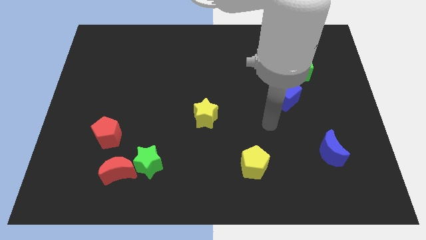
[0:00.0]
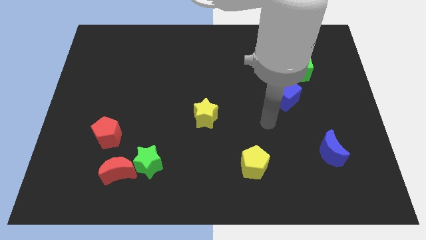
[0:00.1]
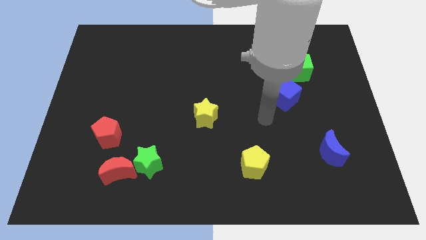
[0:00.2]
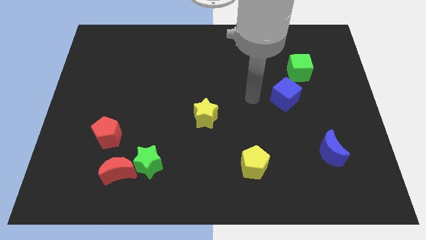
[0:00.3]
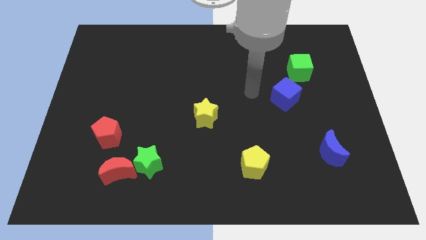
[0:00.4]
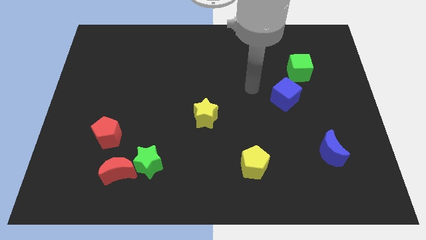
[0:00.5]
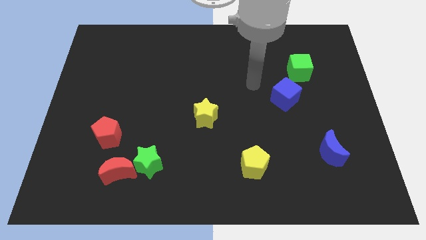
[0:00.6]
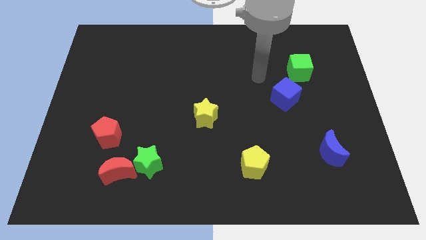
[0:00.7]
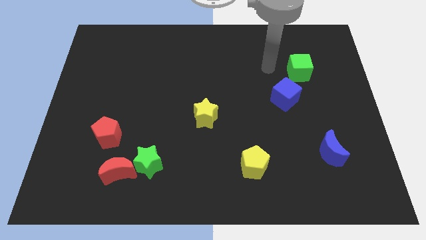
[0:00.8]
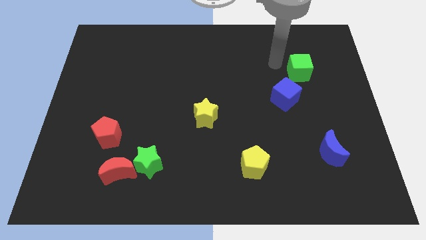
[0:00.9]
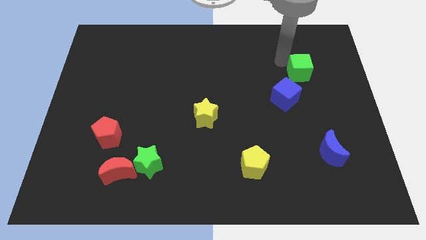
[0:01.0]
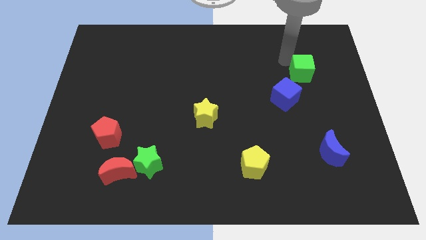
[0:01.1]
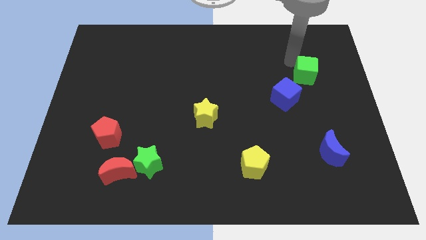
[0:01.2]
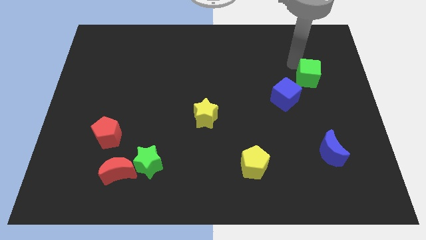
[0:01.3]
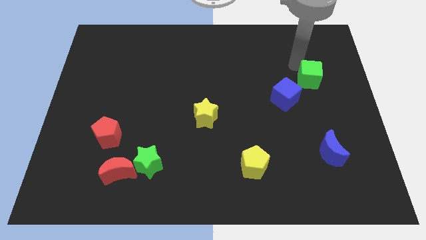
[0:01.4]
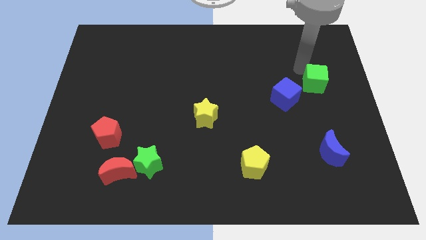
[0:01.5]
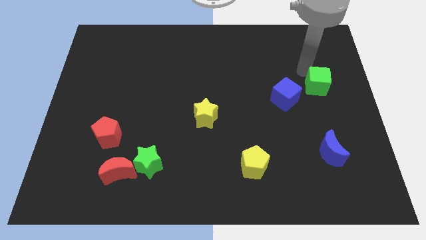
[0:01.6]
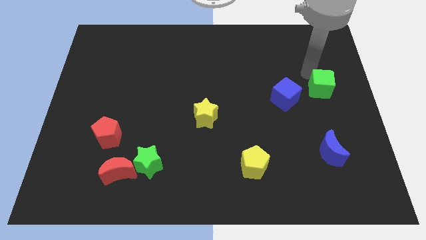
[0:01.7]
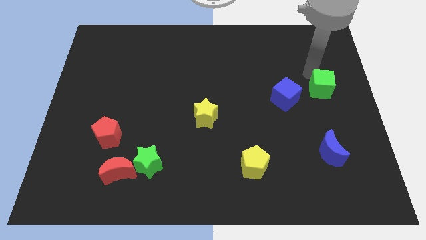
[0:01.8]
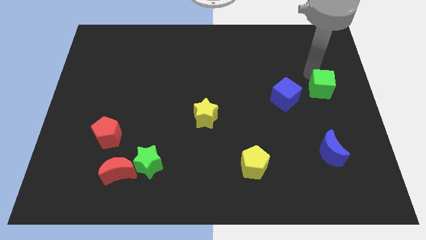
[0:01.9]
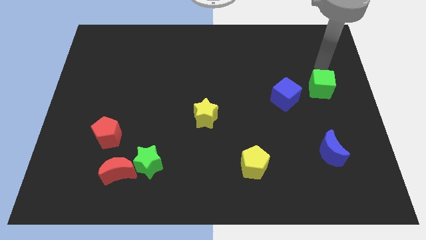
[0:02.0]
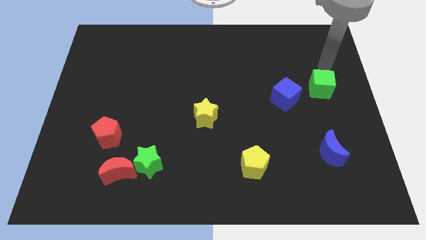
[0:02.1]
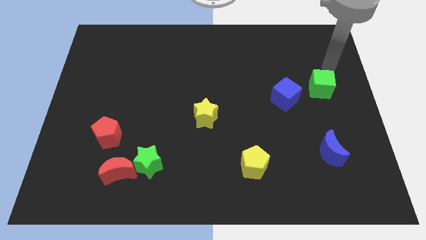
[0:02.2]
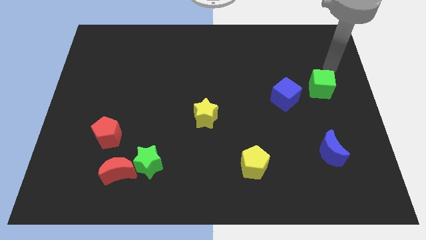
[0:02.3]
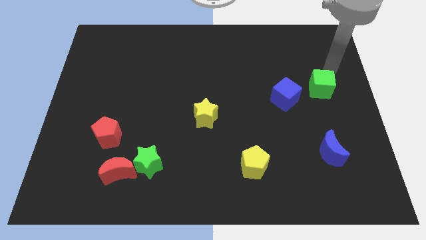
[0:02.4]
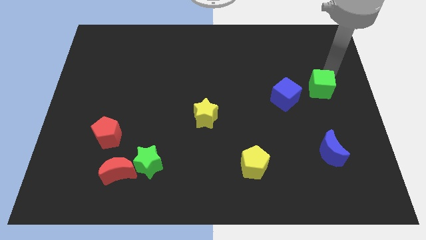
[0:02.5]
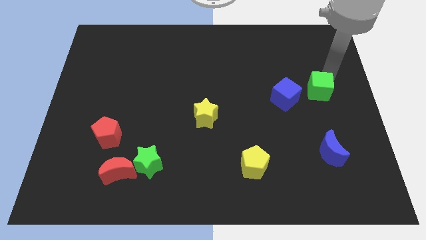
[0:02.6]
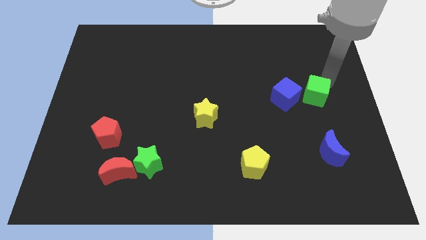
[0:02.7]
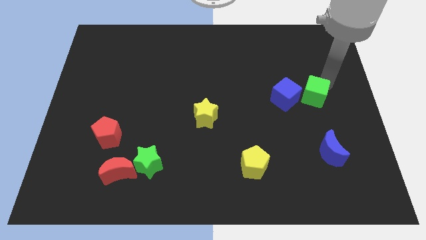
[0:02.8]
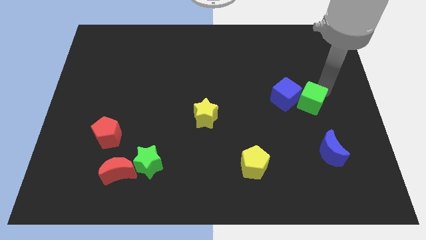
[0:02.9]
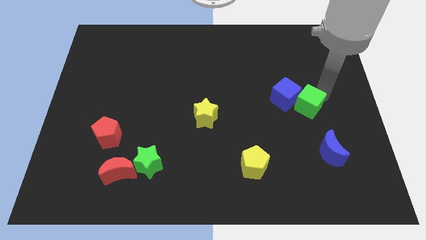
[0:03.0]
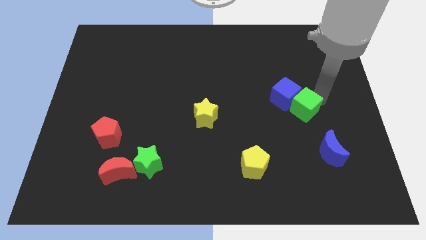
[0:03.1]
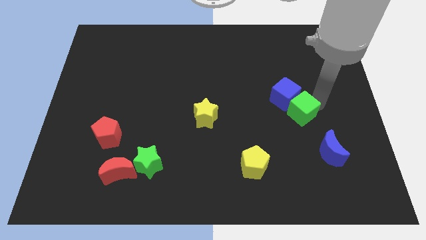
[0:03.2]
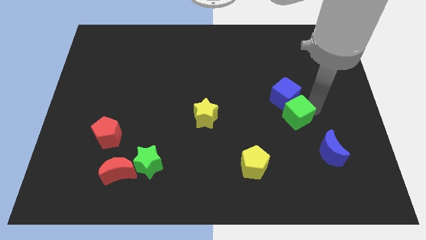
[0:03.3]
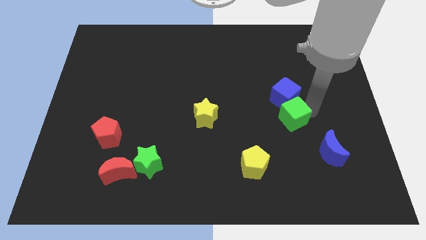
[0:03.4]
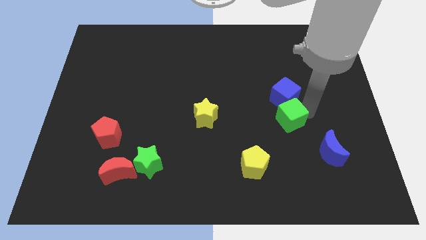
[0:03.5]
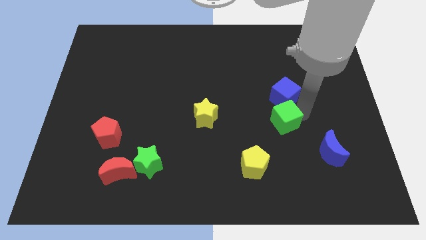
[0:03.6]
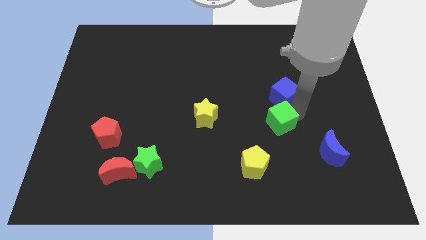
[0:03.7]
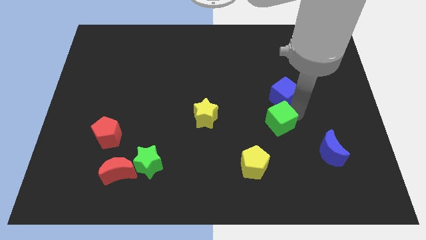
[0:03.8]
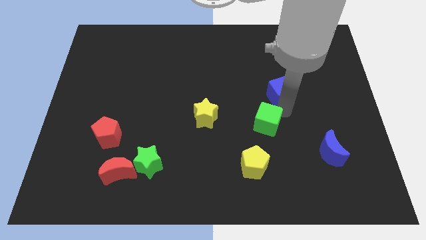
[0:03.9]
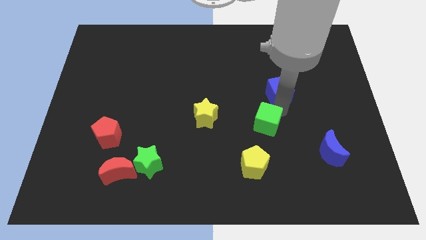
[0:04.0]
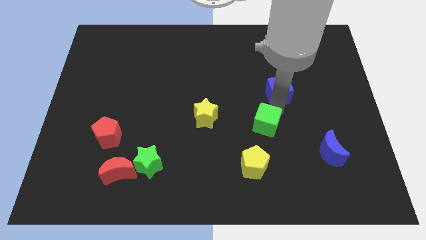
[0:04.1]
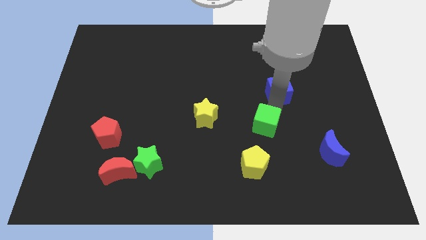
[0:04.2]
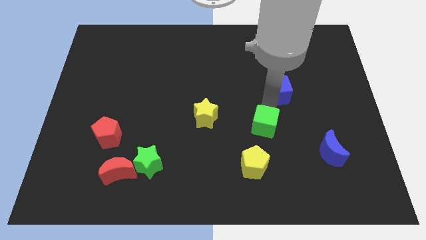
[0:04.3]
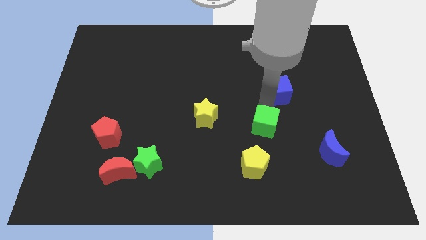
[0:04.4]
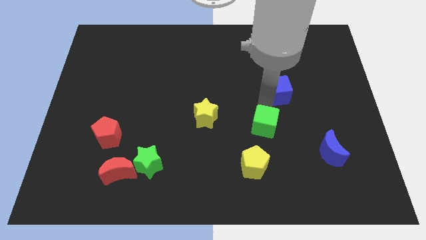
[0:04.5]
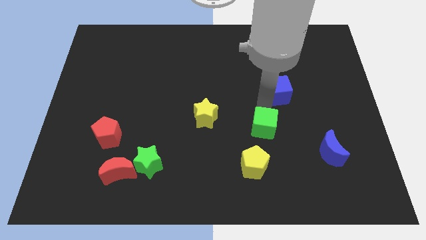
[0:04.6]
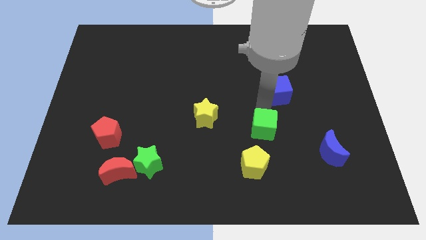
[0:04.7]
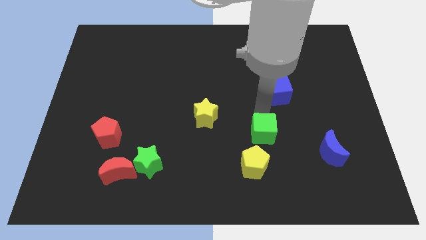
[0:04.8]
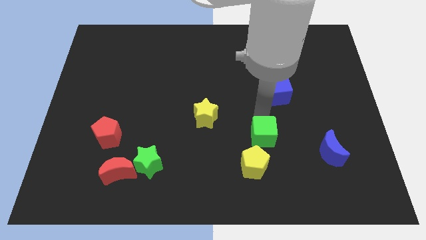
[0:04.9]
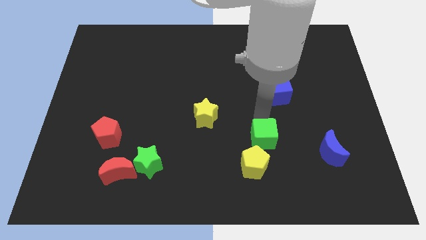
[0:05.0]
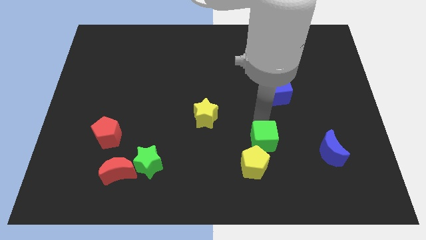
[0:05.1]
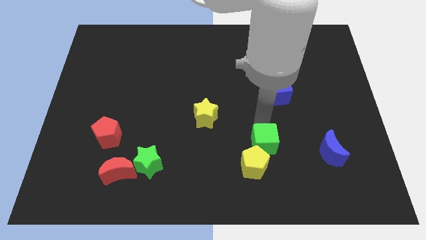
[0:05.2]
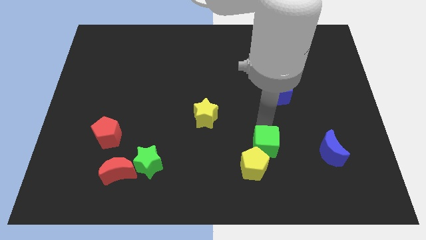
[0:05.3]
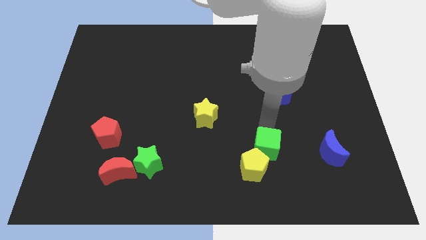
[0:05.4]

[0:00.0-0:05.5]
slide the green cube next to the yellow pentagon

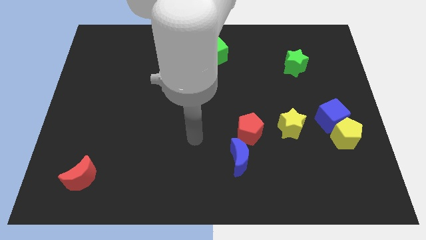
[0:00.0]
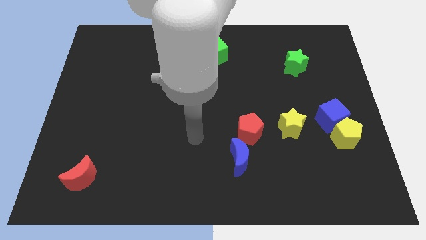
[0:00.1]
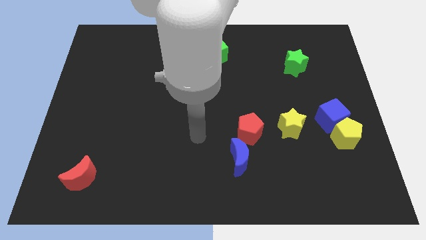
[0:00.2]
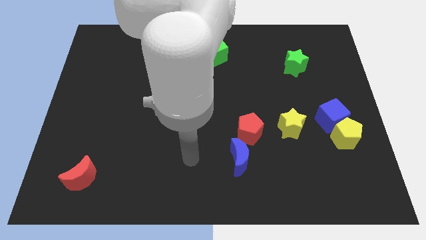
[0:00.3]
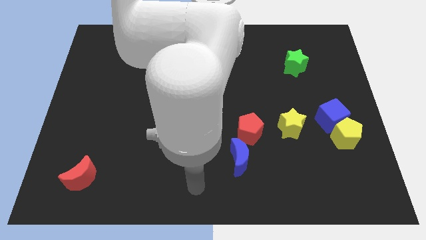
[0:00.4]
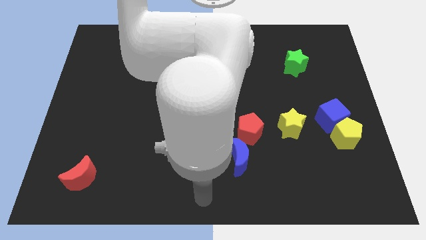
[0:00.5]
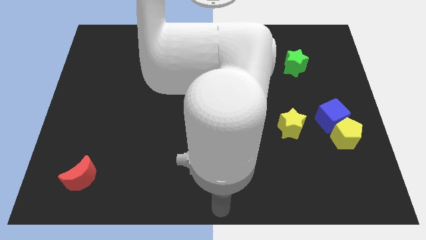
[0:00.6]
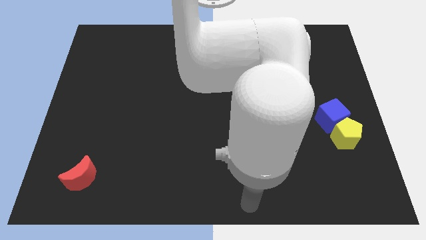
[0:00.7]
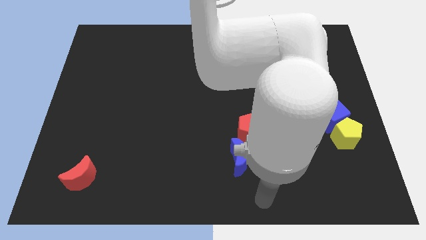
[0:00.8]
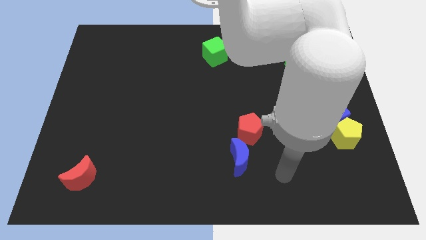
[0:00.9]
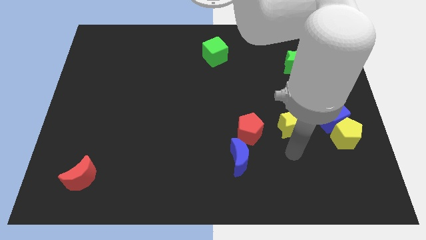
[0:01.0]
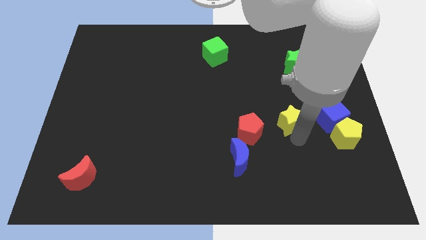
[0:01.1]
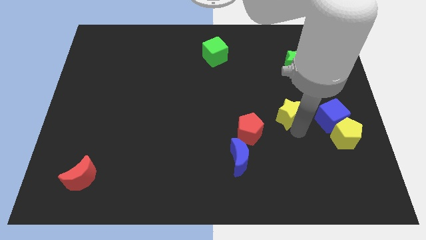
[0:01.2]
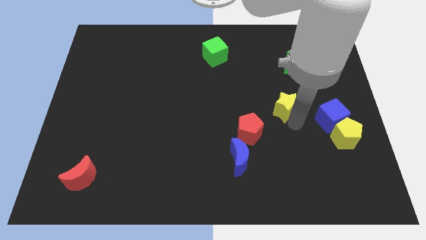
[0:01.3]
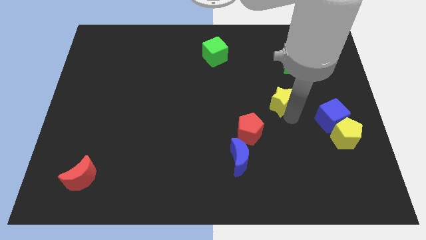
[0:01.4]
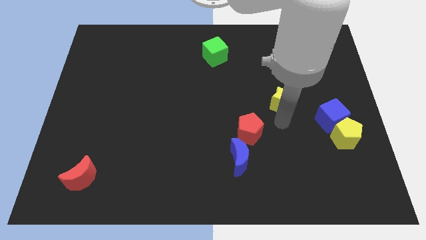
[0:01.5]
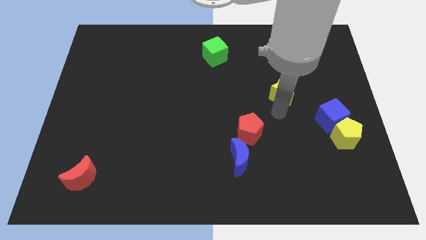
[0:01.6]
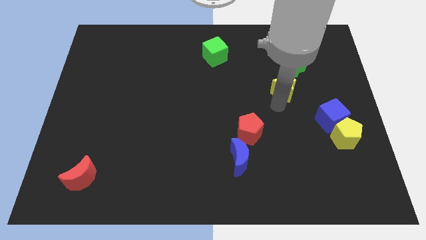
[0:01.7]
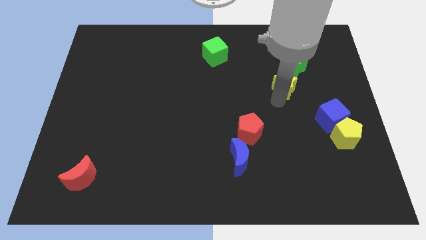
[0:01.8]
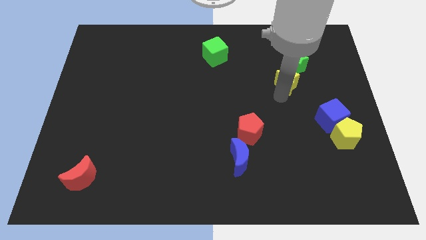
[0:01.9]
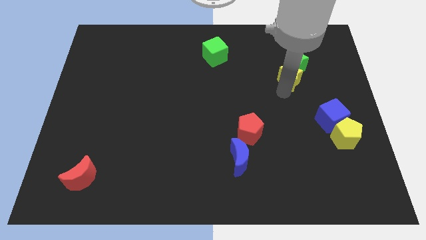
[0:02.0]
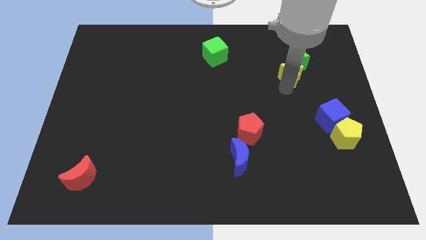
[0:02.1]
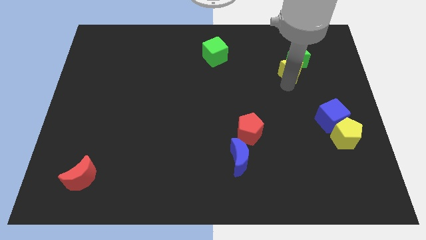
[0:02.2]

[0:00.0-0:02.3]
put the yellow star next to the green star

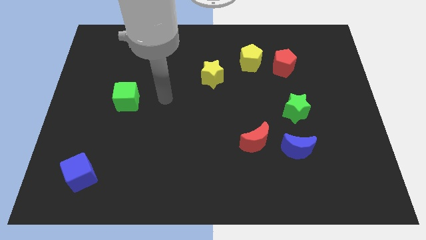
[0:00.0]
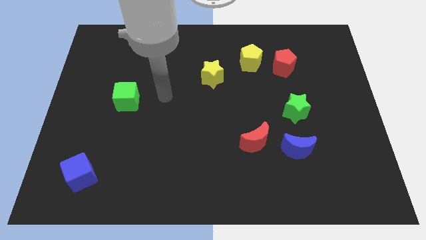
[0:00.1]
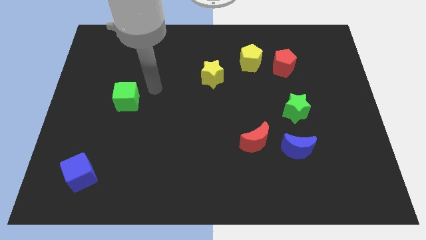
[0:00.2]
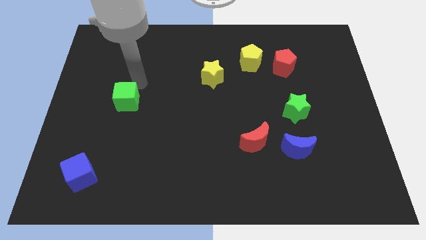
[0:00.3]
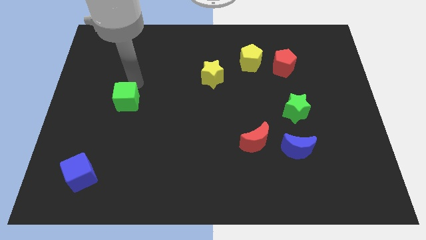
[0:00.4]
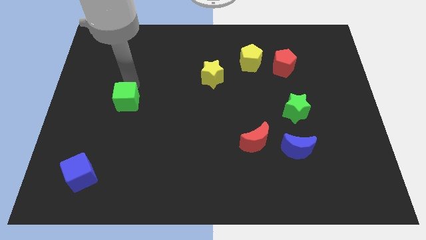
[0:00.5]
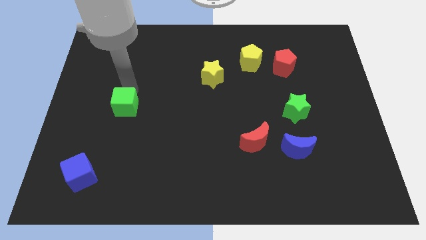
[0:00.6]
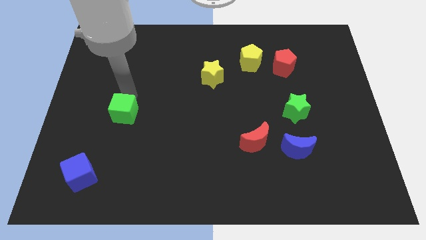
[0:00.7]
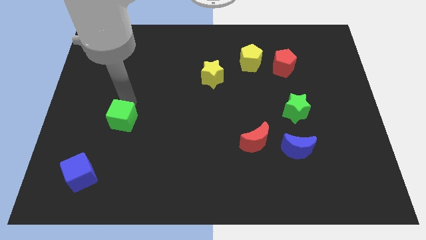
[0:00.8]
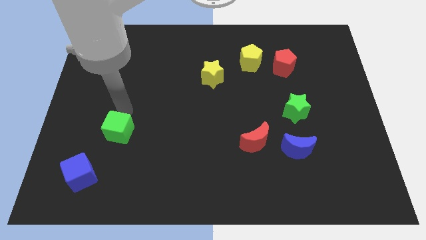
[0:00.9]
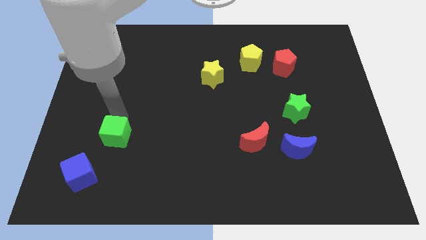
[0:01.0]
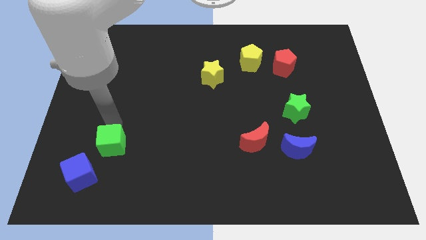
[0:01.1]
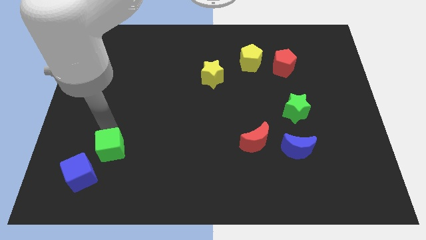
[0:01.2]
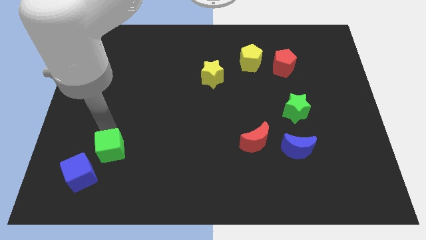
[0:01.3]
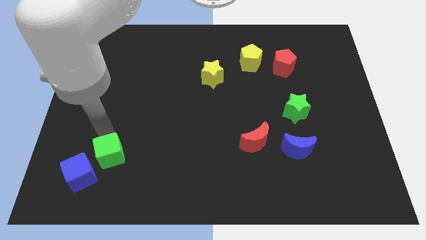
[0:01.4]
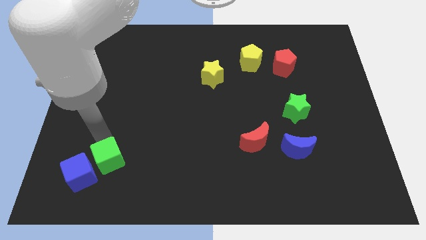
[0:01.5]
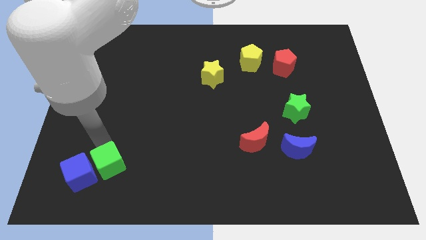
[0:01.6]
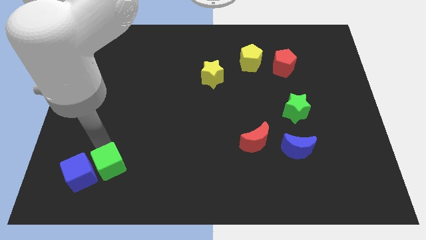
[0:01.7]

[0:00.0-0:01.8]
put the green cube towards the blue cube
